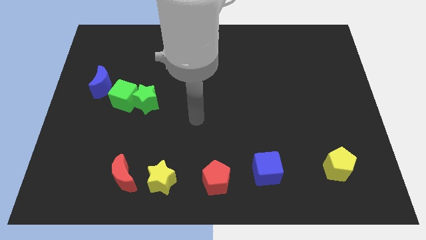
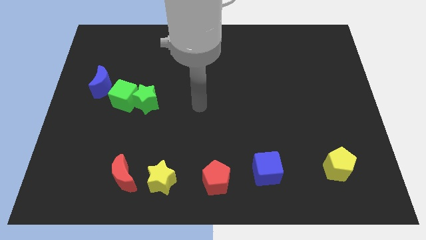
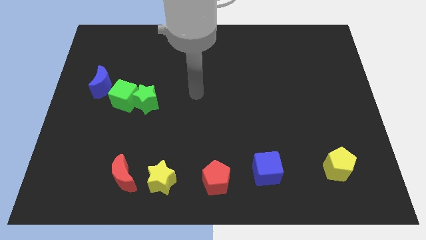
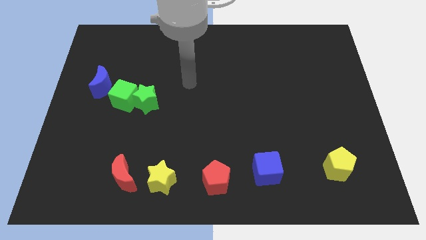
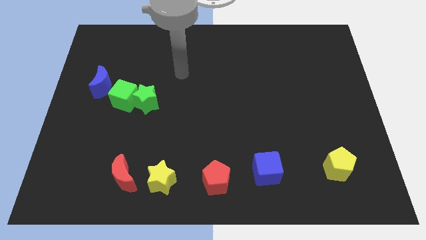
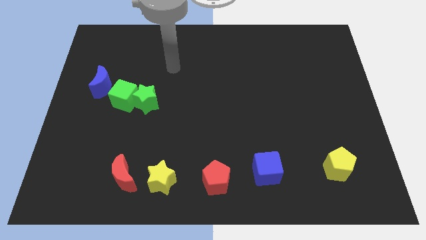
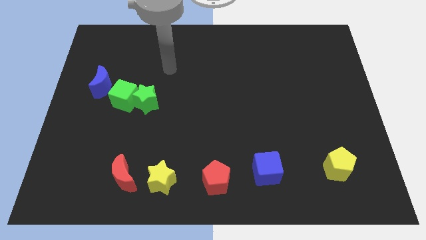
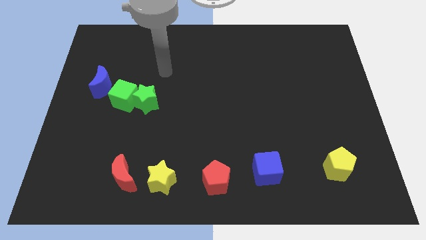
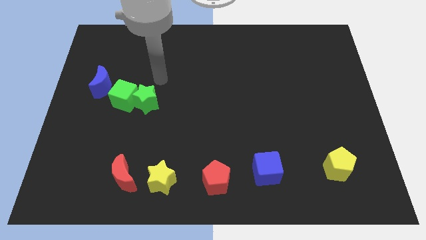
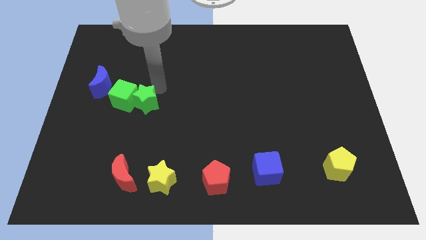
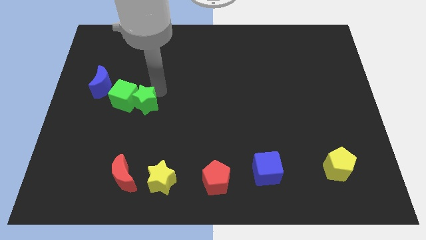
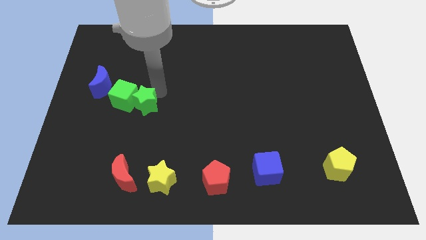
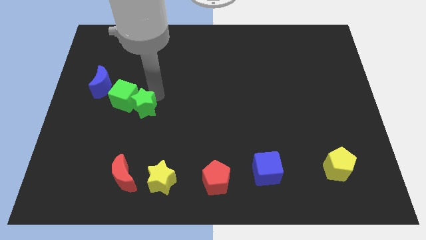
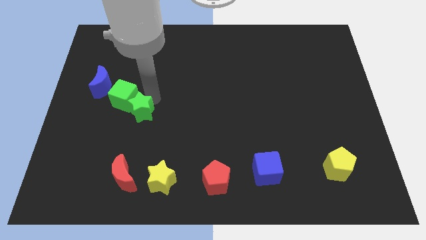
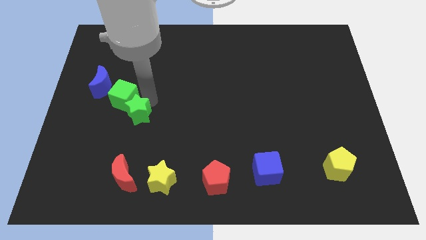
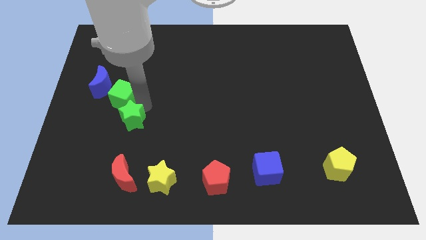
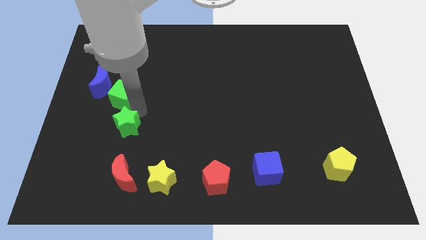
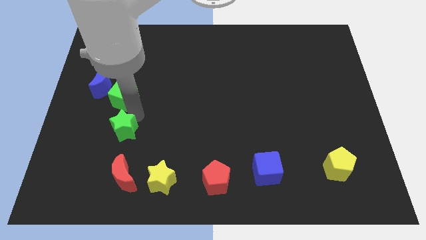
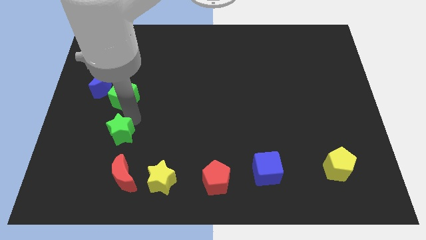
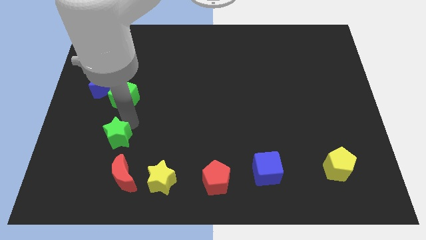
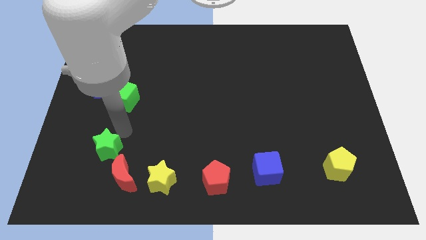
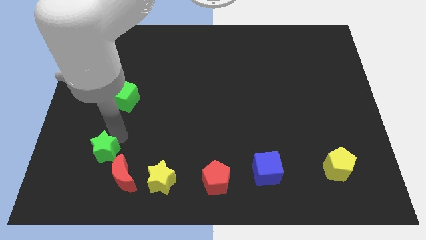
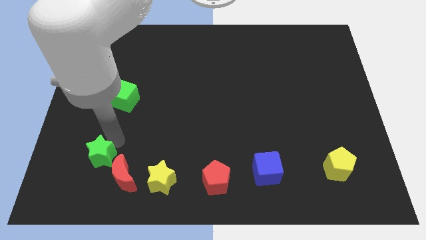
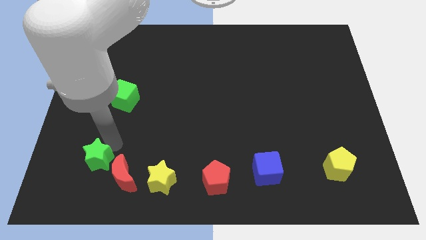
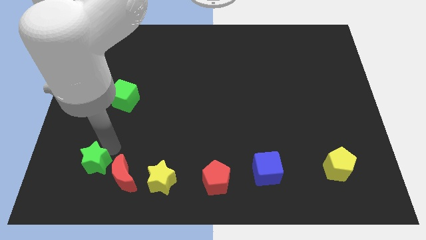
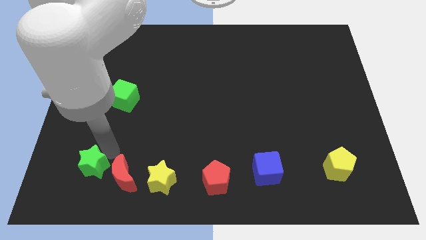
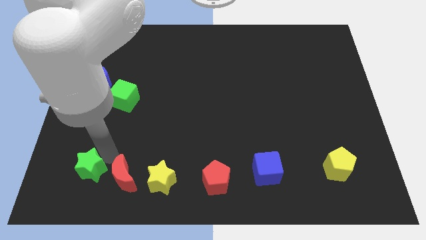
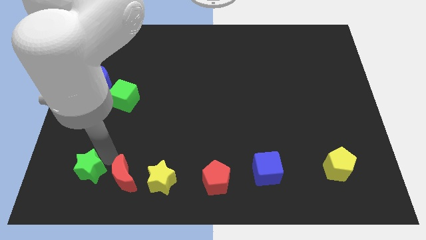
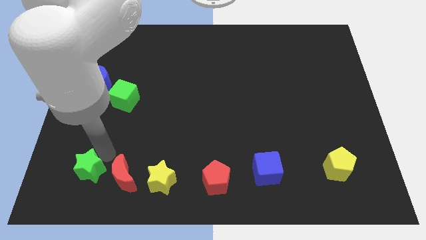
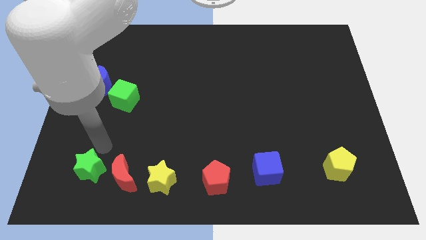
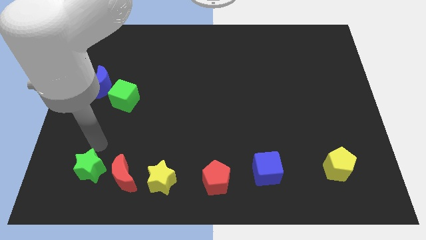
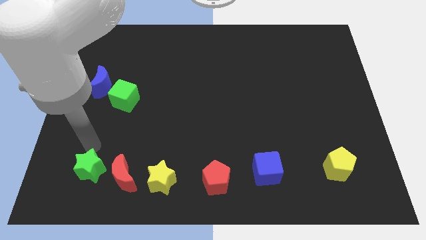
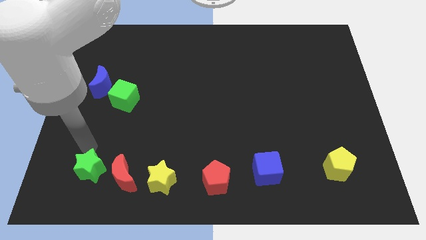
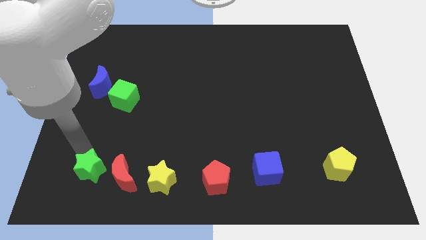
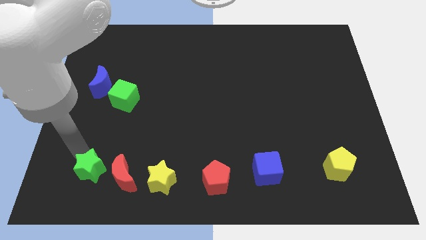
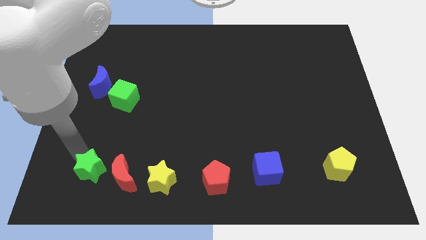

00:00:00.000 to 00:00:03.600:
move the green star to the left of the red crescent

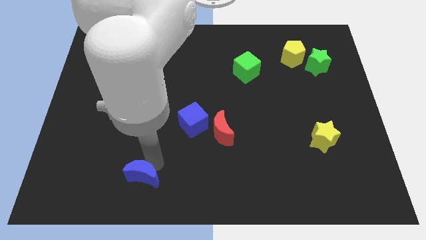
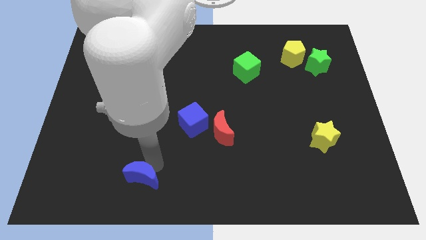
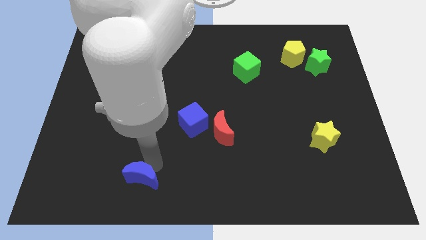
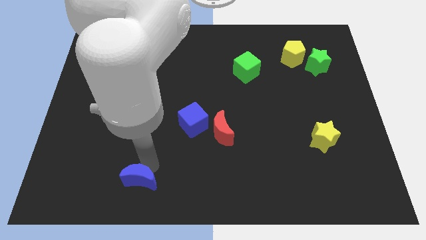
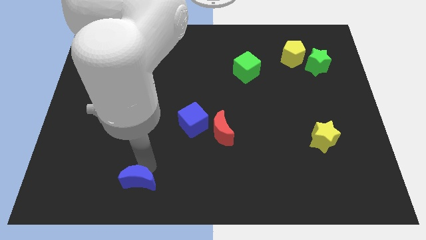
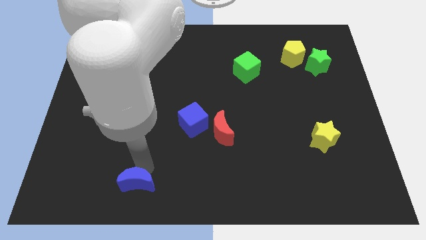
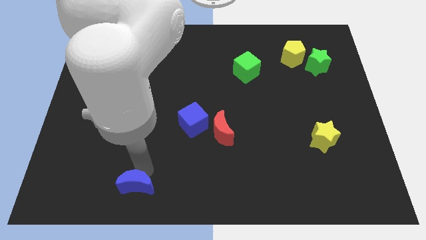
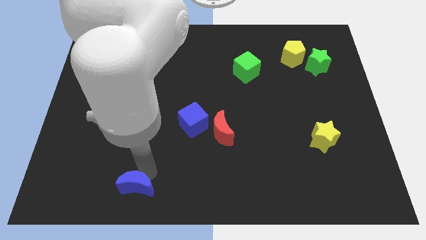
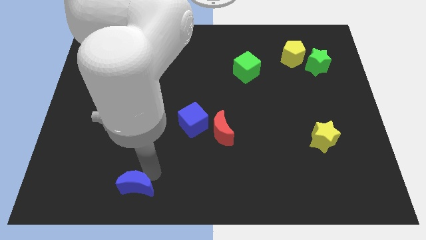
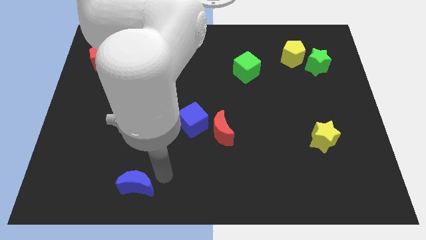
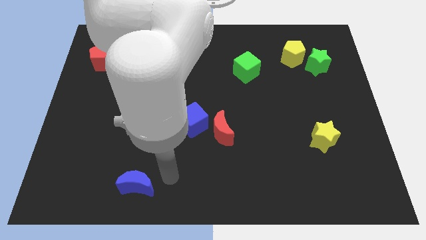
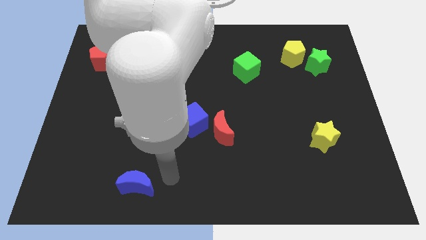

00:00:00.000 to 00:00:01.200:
move blue moon towards the bottom of the board

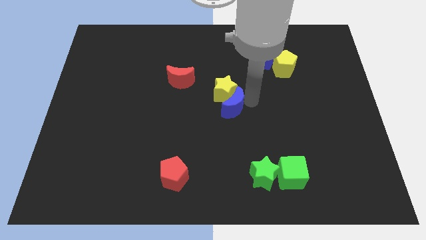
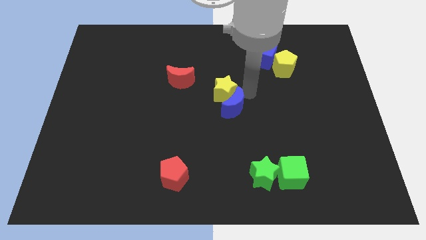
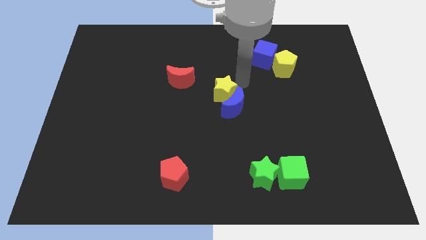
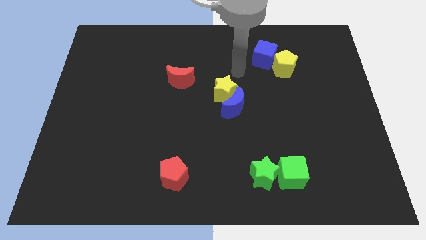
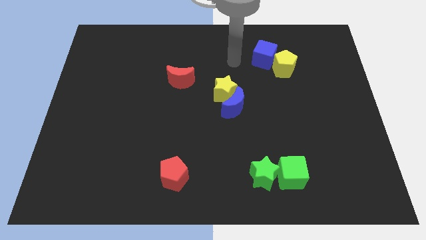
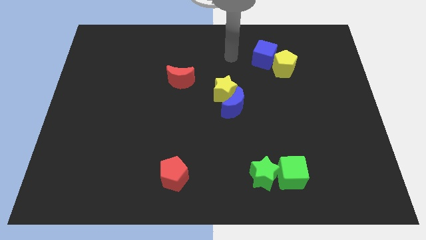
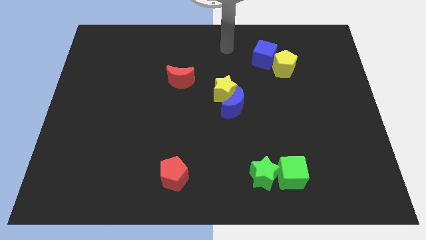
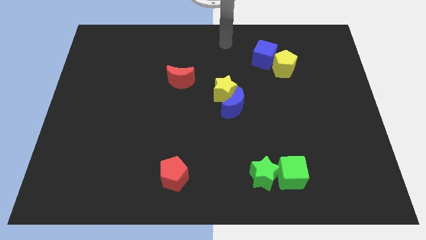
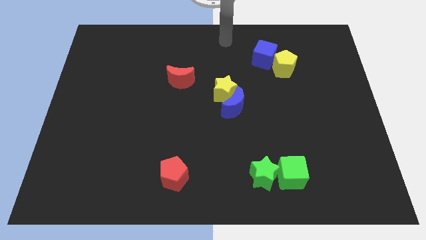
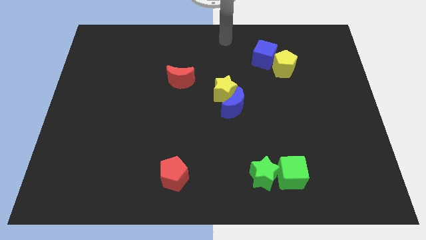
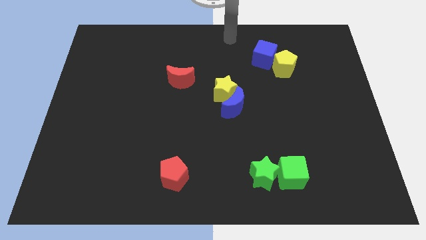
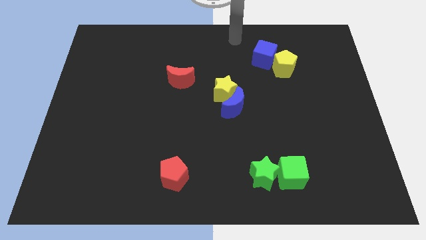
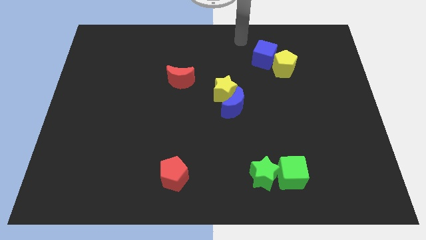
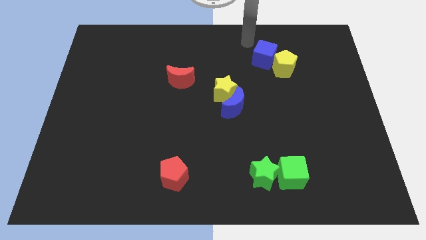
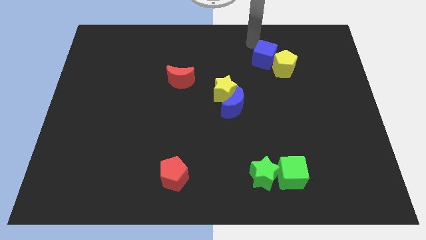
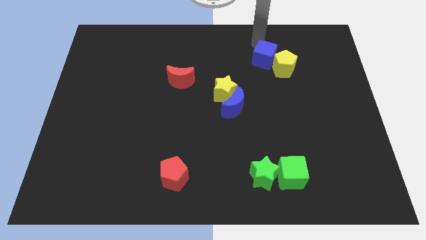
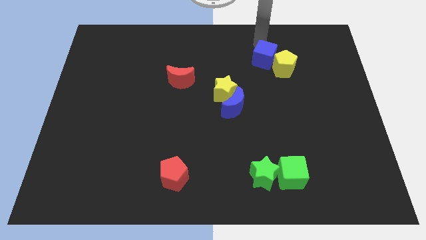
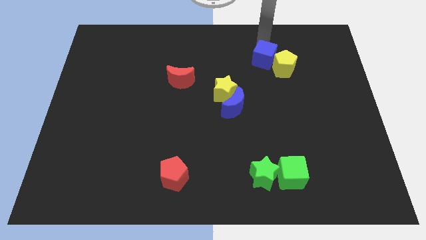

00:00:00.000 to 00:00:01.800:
move your arm towards the top of the blue cube

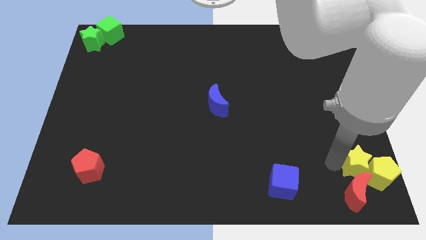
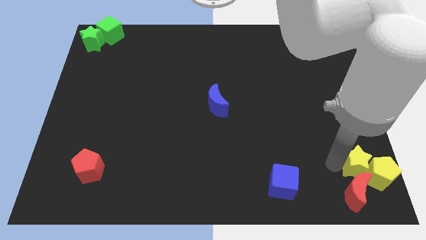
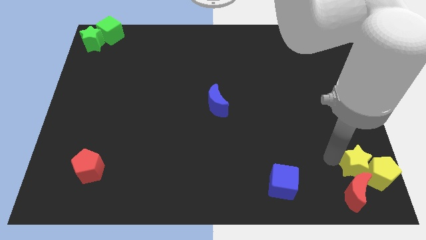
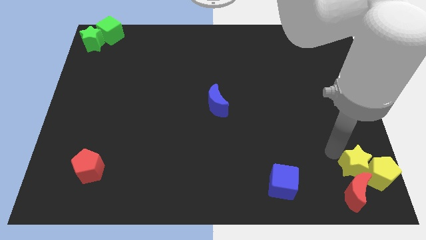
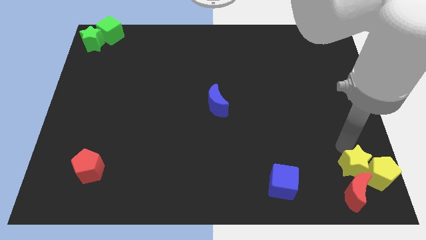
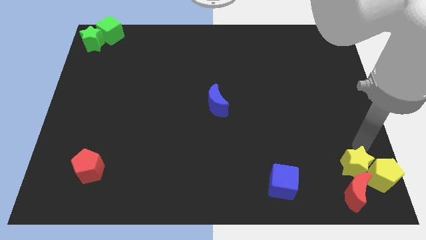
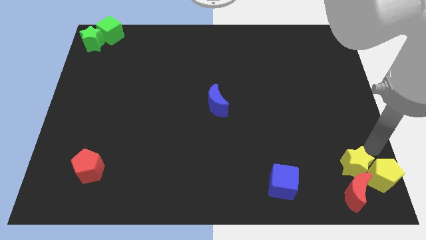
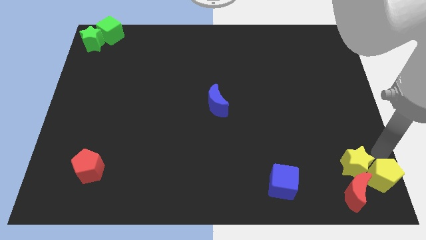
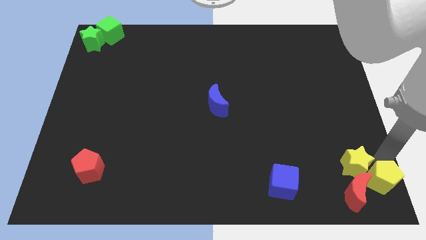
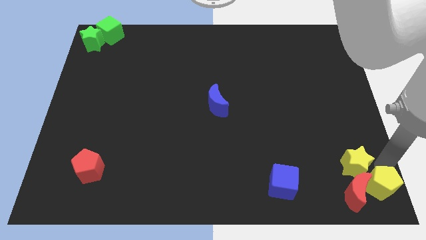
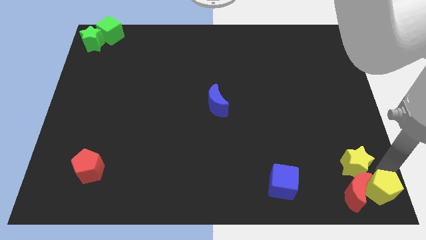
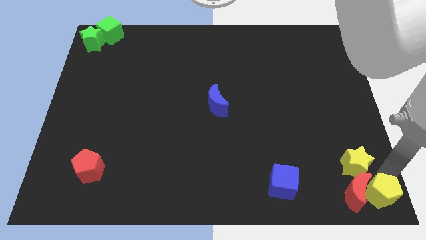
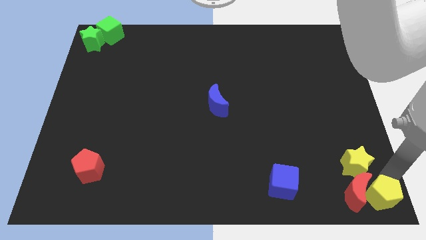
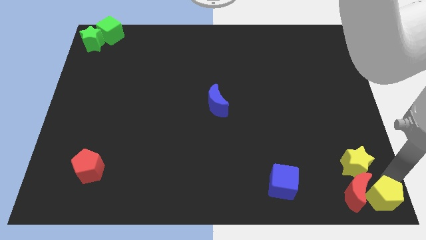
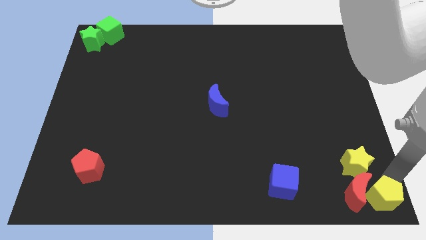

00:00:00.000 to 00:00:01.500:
place the yellow pentagon right of red crescent

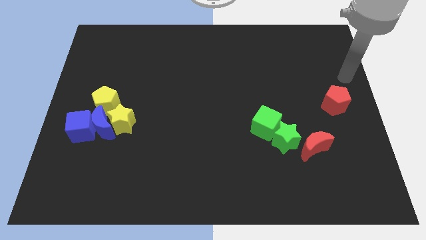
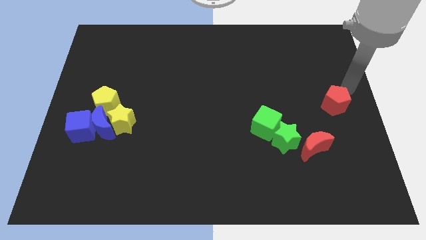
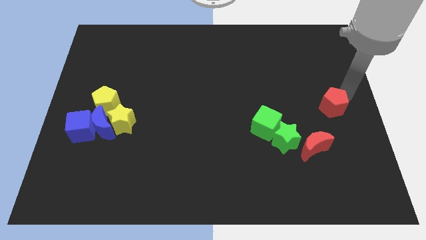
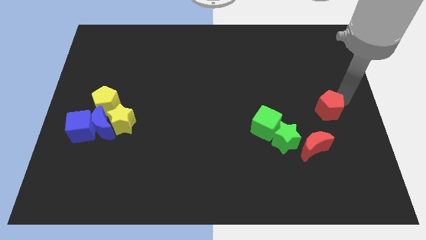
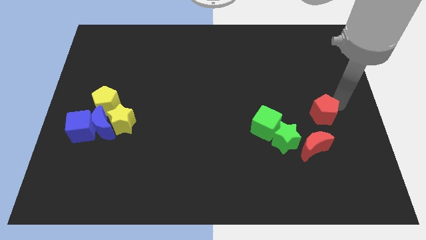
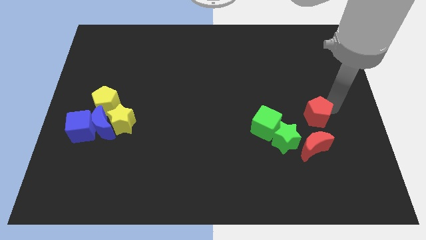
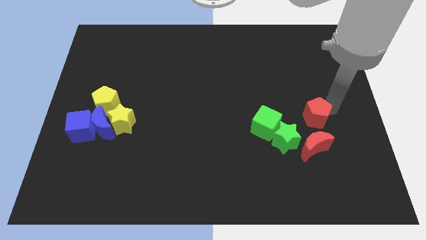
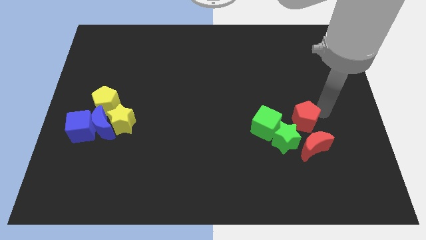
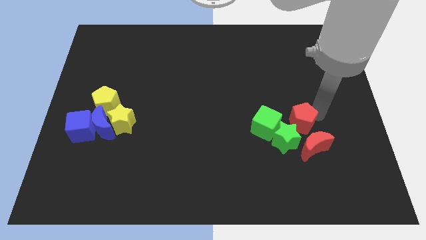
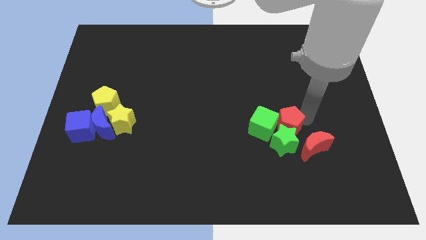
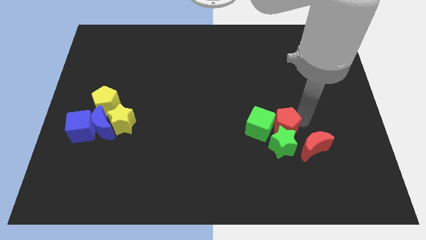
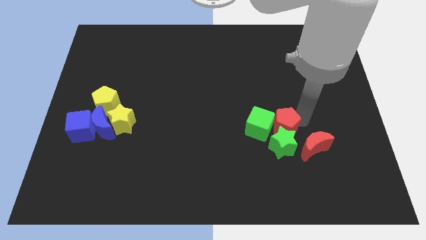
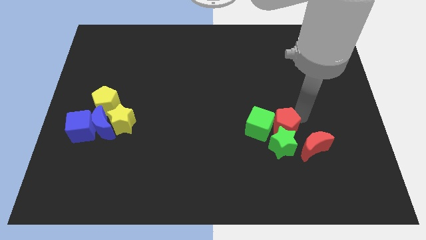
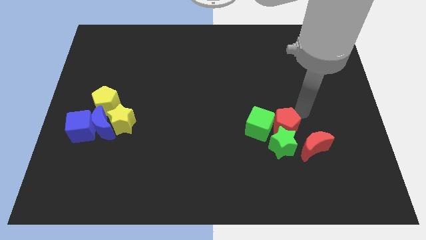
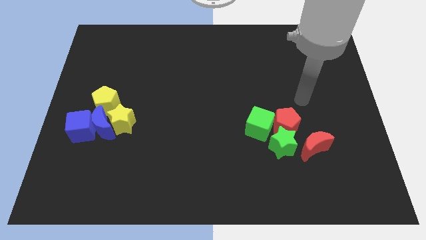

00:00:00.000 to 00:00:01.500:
push the red pentagon into the green star
